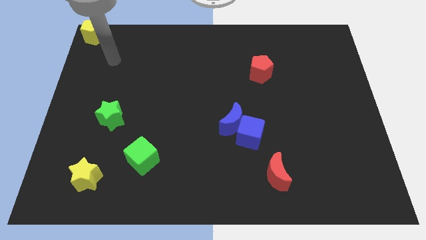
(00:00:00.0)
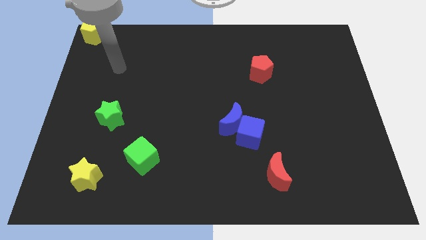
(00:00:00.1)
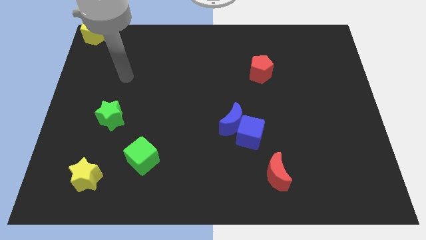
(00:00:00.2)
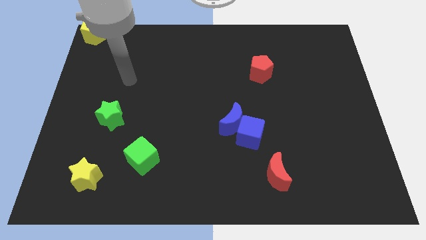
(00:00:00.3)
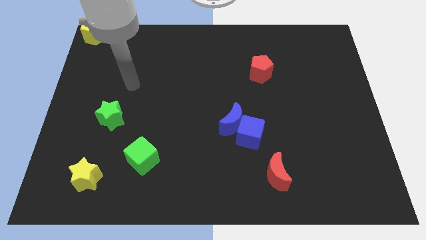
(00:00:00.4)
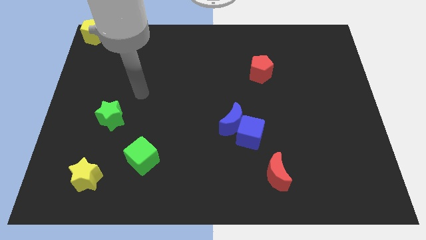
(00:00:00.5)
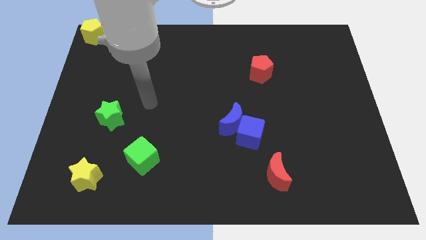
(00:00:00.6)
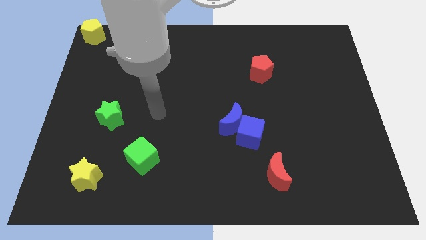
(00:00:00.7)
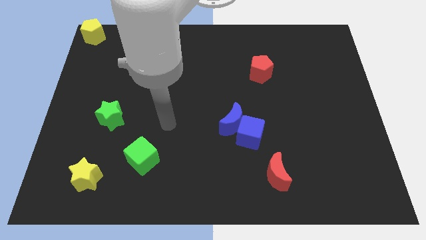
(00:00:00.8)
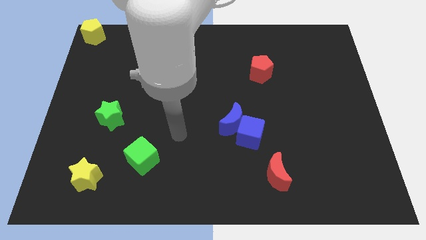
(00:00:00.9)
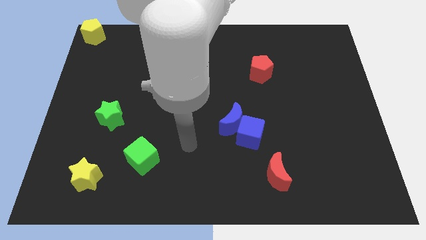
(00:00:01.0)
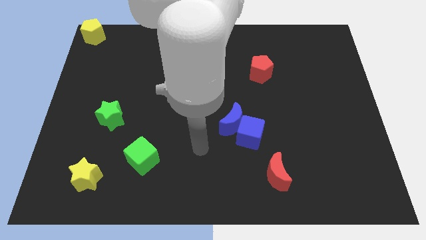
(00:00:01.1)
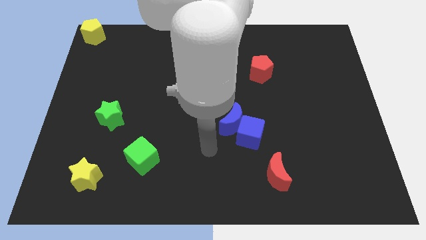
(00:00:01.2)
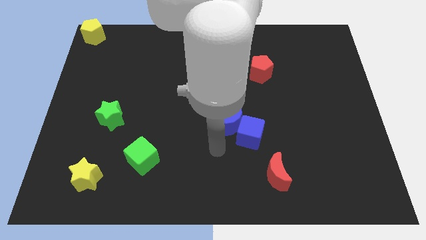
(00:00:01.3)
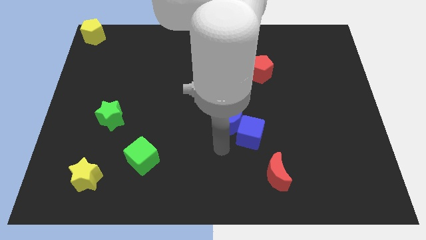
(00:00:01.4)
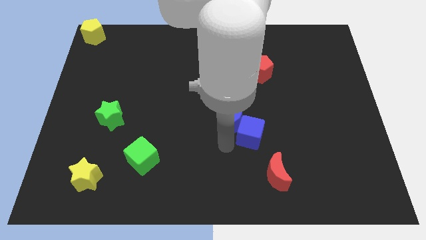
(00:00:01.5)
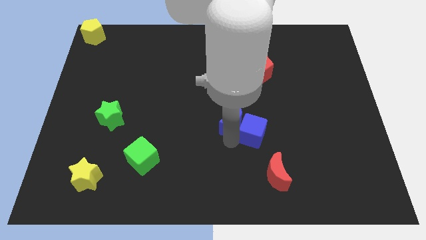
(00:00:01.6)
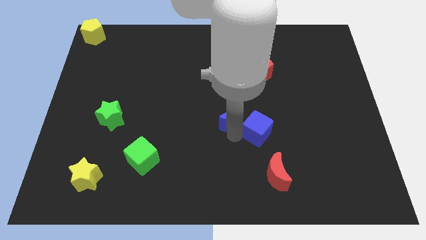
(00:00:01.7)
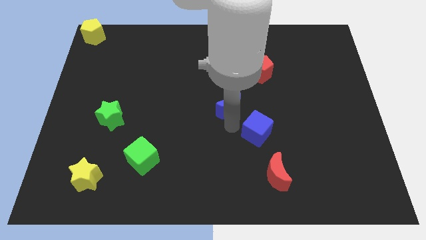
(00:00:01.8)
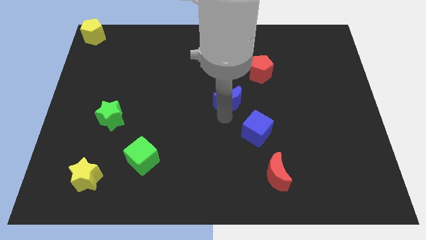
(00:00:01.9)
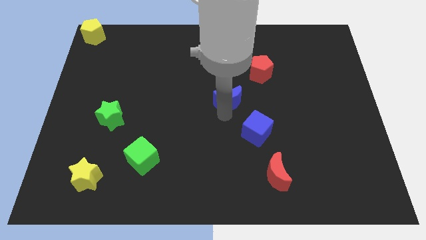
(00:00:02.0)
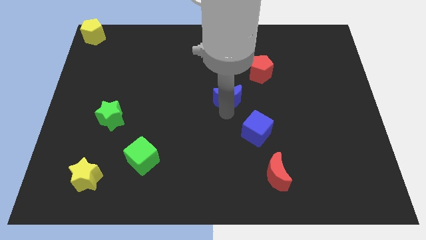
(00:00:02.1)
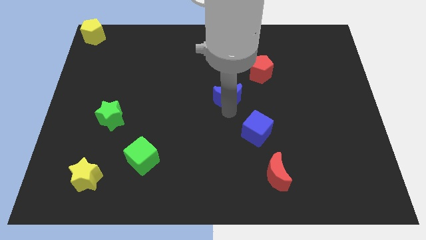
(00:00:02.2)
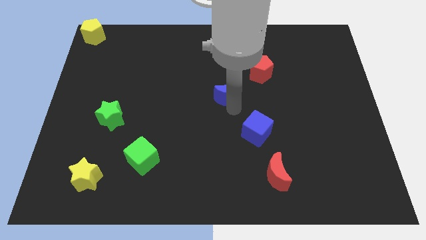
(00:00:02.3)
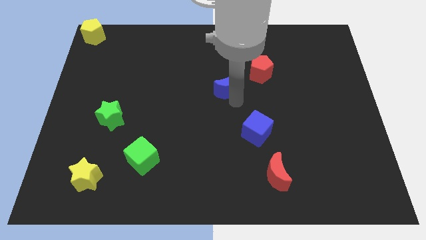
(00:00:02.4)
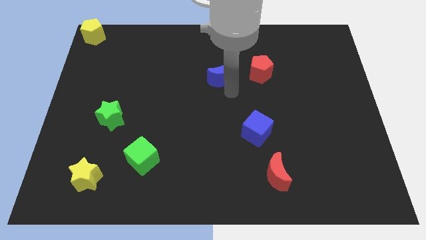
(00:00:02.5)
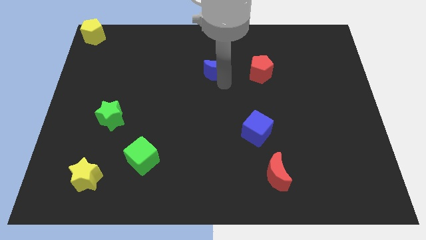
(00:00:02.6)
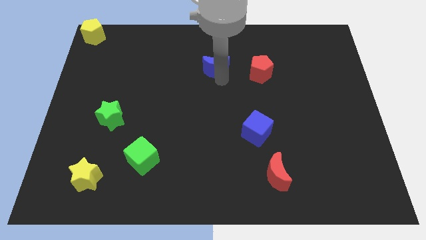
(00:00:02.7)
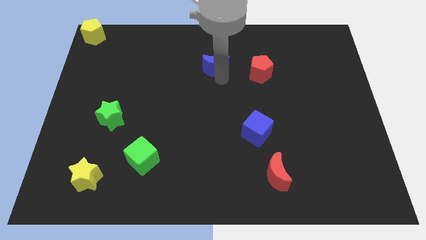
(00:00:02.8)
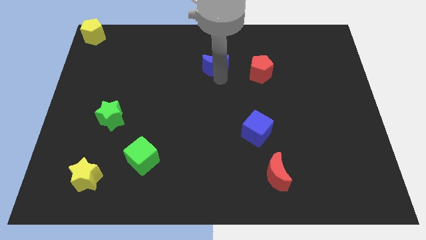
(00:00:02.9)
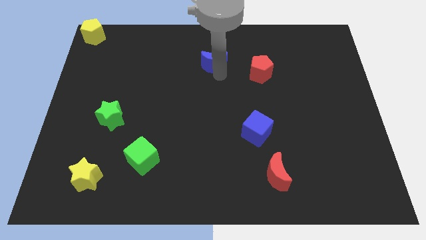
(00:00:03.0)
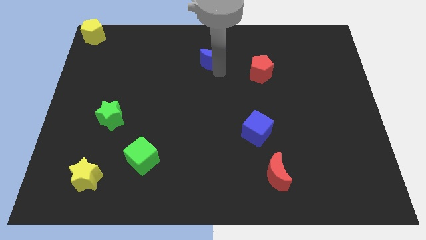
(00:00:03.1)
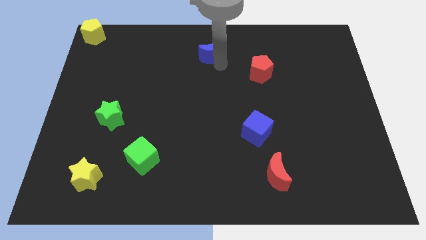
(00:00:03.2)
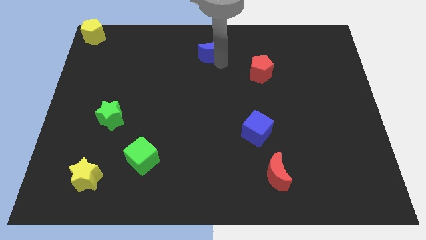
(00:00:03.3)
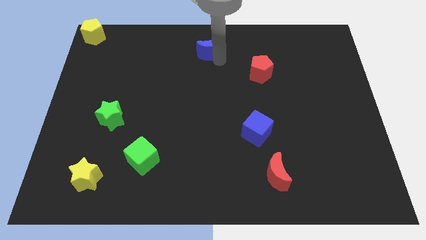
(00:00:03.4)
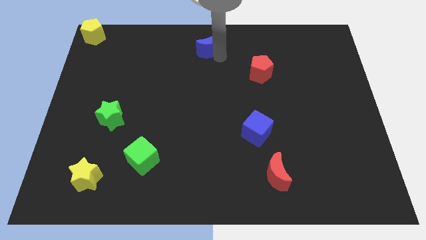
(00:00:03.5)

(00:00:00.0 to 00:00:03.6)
move the blue moon far from the blue cube

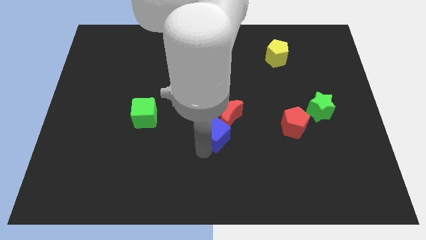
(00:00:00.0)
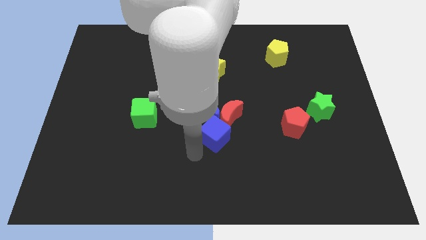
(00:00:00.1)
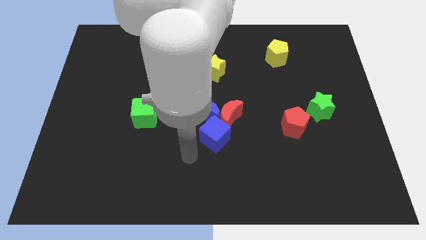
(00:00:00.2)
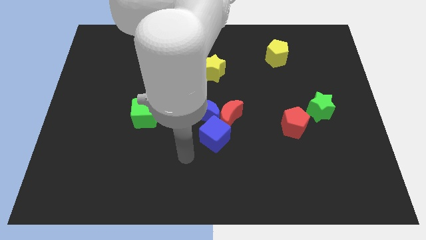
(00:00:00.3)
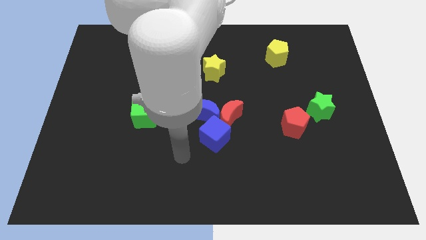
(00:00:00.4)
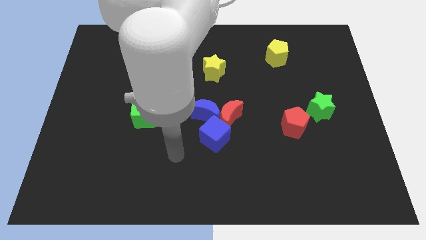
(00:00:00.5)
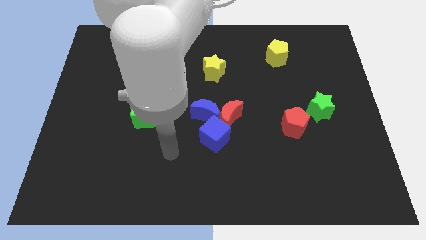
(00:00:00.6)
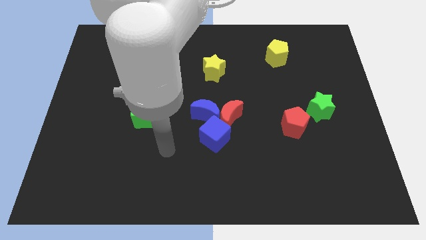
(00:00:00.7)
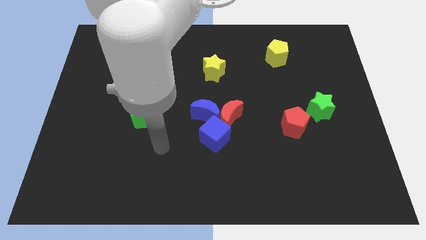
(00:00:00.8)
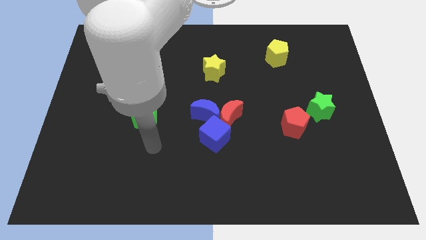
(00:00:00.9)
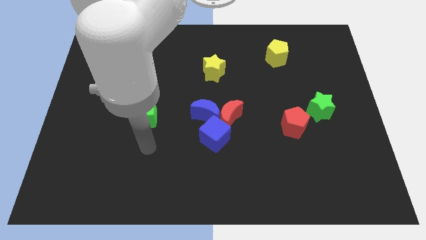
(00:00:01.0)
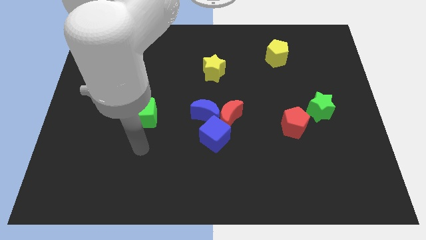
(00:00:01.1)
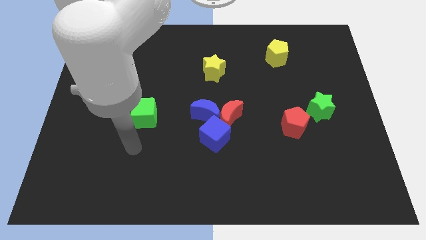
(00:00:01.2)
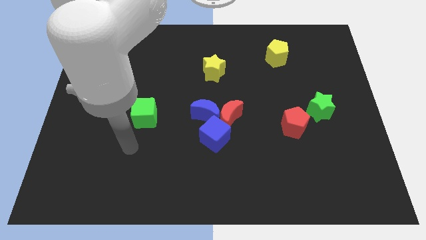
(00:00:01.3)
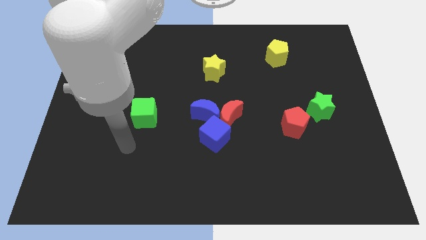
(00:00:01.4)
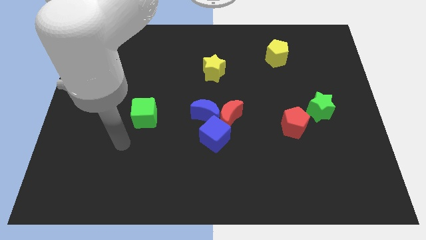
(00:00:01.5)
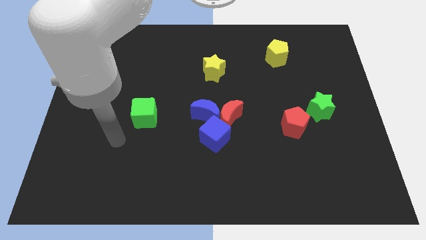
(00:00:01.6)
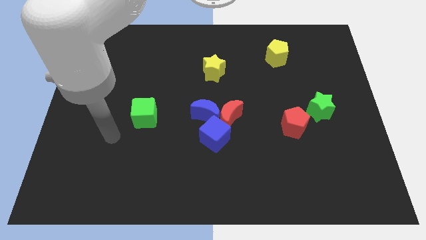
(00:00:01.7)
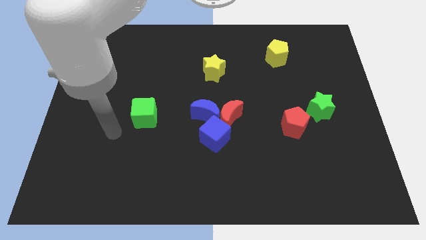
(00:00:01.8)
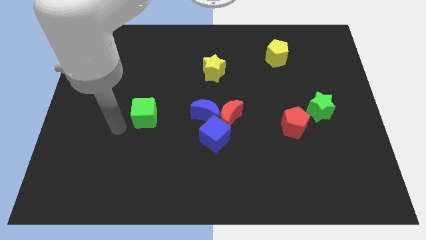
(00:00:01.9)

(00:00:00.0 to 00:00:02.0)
move the arm near to the green cube

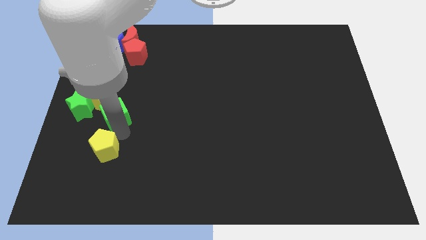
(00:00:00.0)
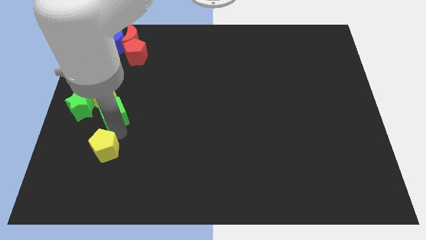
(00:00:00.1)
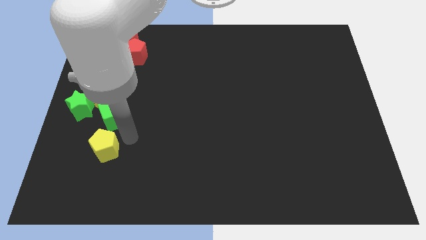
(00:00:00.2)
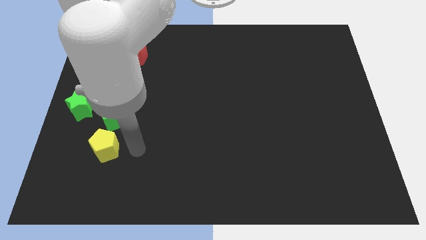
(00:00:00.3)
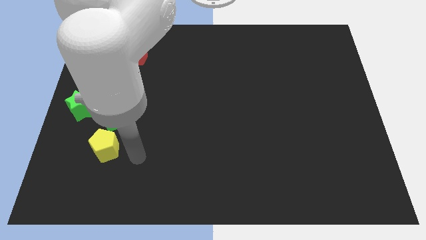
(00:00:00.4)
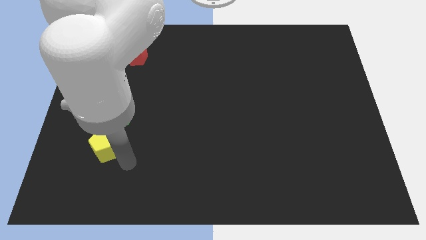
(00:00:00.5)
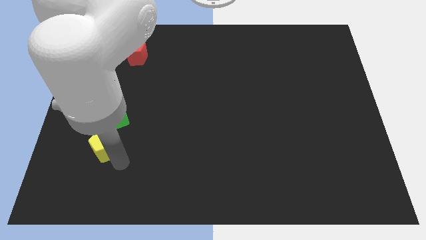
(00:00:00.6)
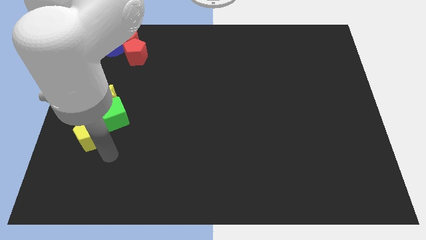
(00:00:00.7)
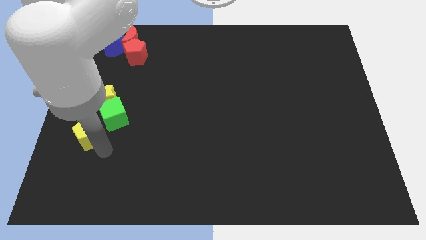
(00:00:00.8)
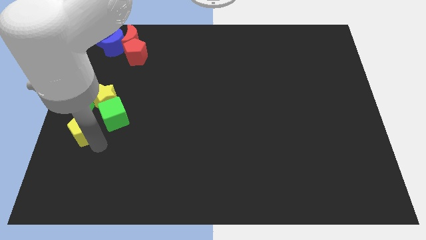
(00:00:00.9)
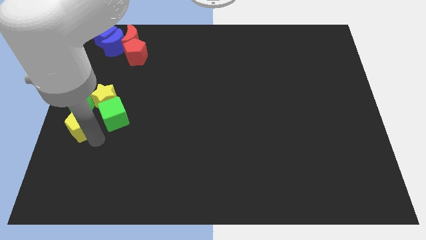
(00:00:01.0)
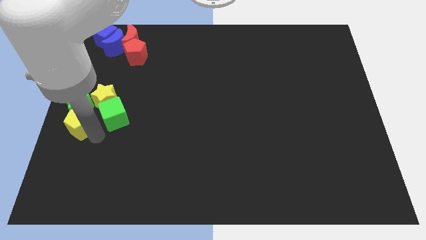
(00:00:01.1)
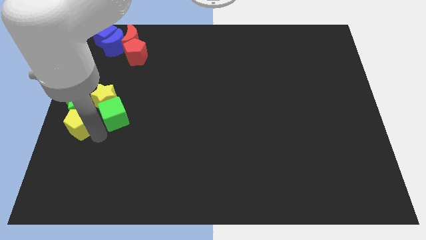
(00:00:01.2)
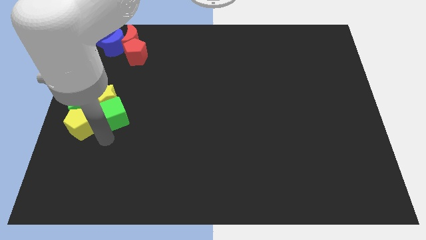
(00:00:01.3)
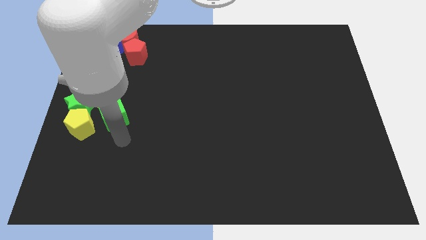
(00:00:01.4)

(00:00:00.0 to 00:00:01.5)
move the yellow pentagon to the bottom of the green star

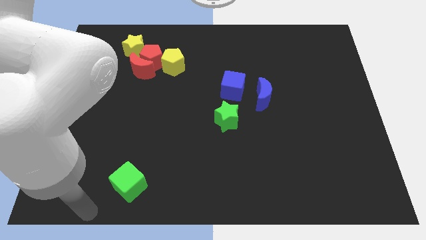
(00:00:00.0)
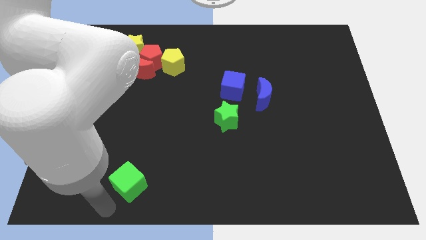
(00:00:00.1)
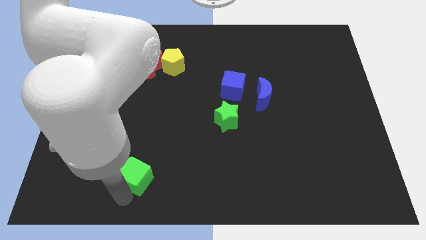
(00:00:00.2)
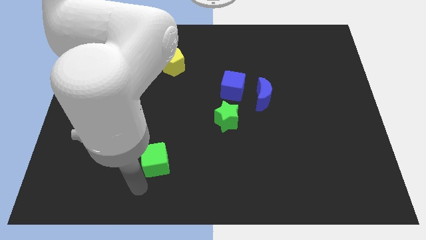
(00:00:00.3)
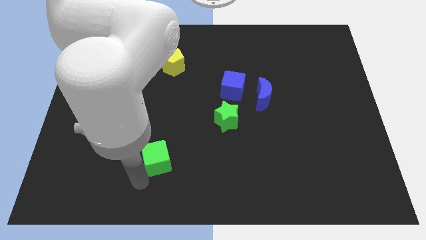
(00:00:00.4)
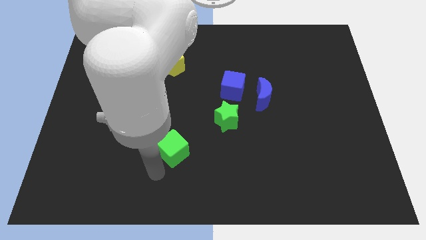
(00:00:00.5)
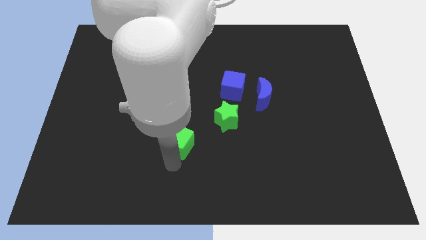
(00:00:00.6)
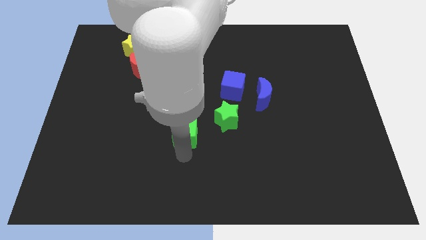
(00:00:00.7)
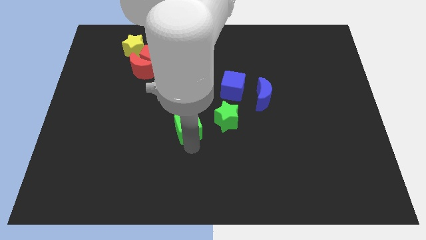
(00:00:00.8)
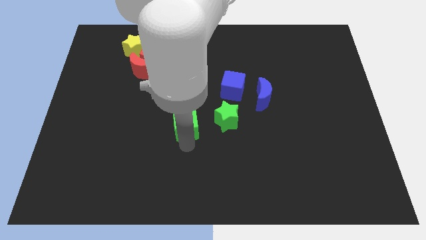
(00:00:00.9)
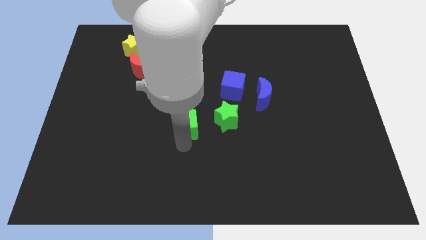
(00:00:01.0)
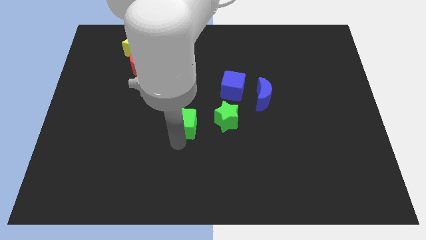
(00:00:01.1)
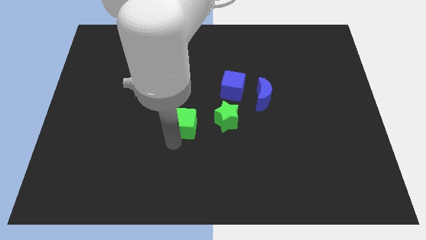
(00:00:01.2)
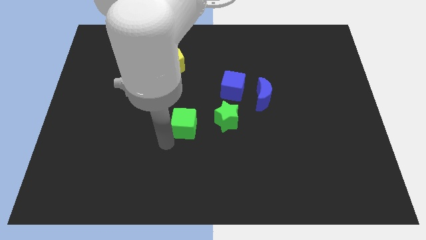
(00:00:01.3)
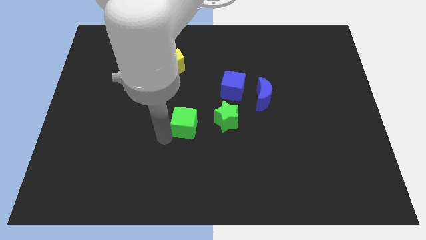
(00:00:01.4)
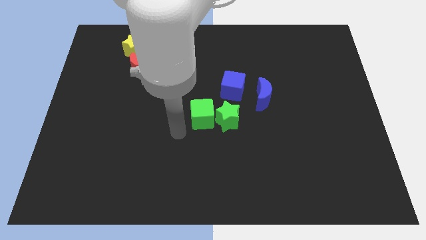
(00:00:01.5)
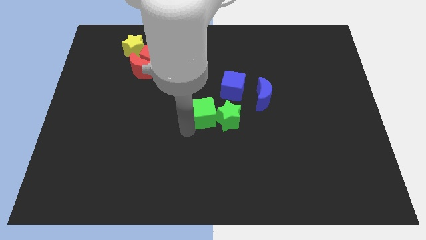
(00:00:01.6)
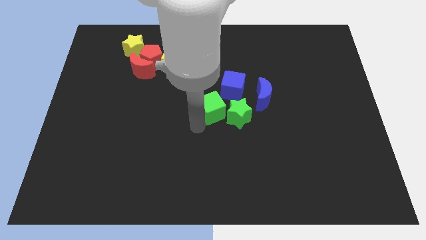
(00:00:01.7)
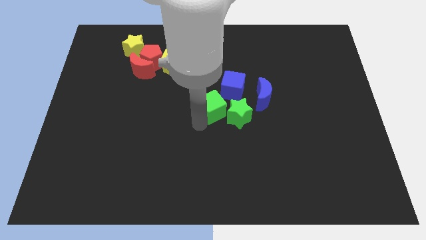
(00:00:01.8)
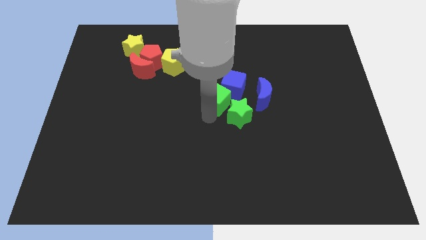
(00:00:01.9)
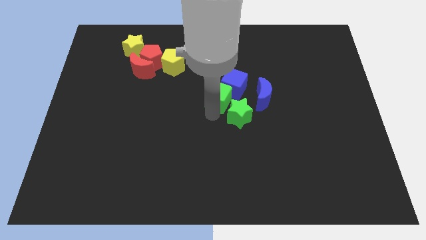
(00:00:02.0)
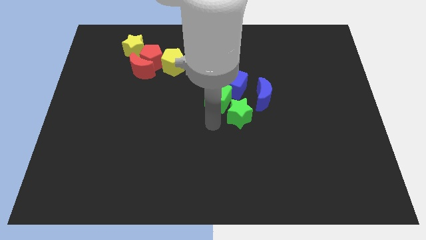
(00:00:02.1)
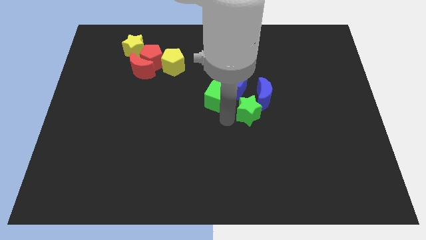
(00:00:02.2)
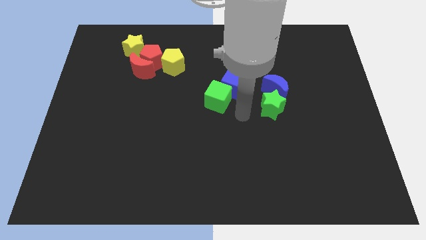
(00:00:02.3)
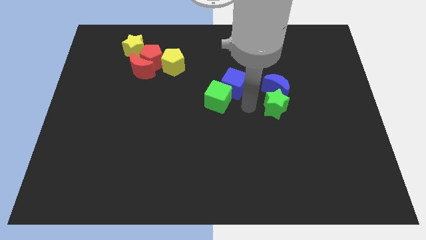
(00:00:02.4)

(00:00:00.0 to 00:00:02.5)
move green cube below the blue cube
